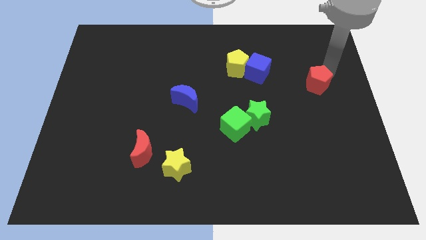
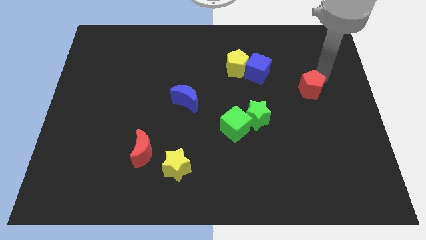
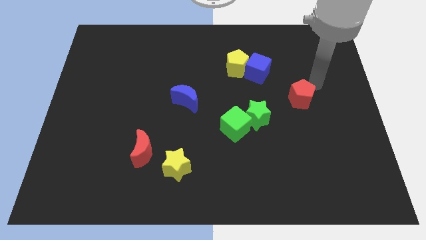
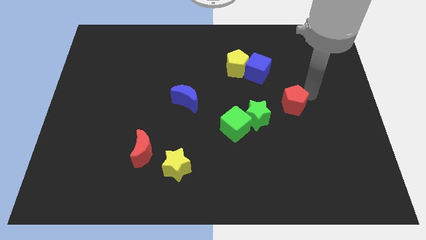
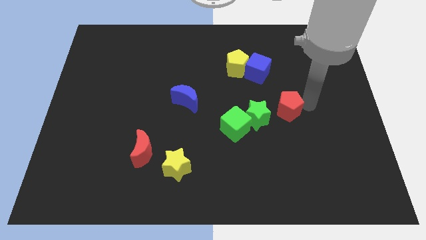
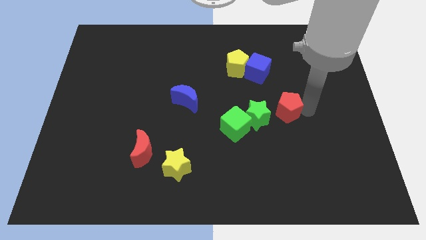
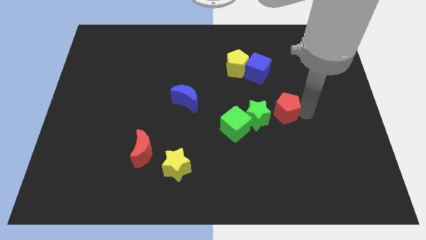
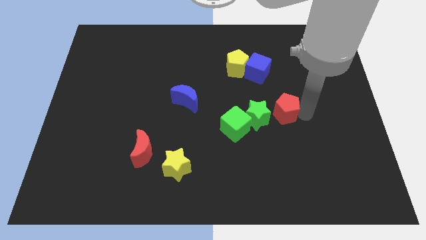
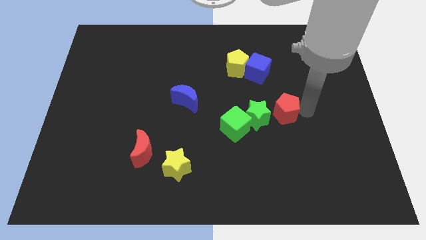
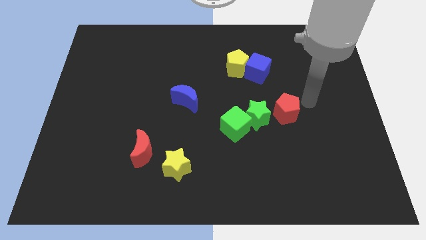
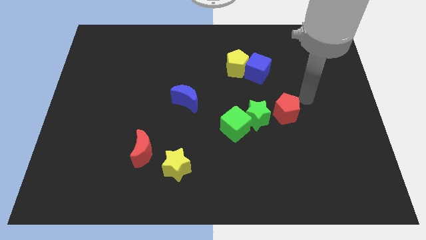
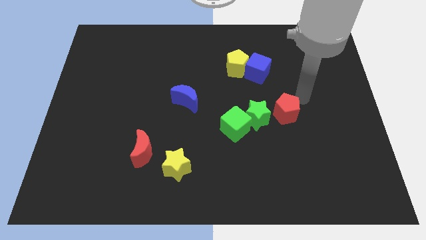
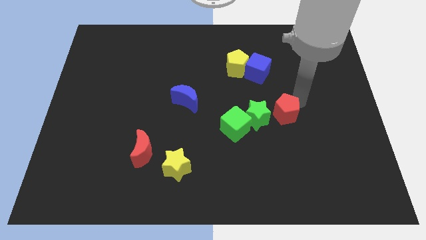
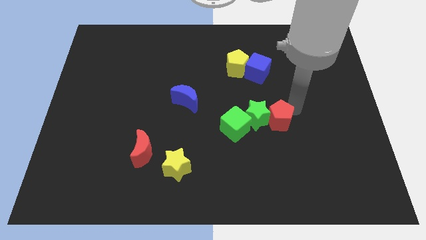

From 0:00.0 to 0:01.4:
push the red pentagon towards the right of the green star

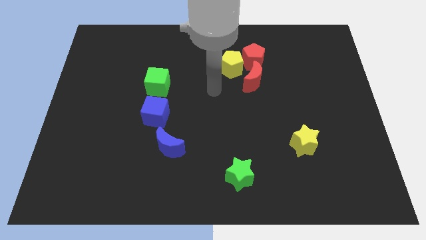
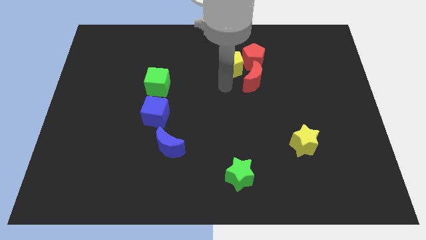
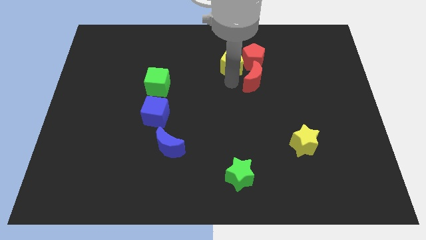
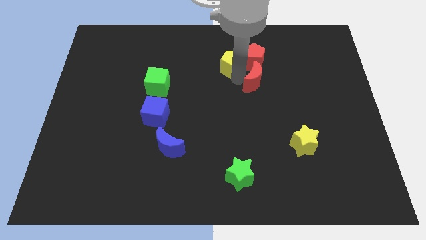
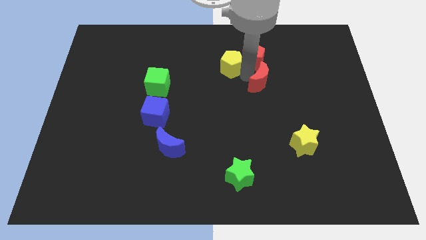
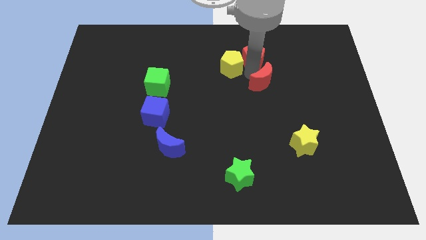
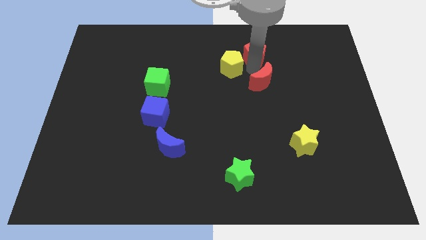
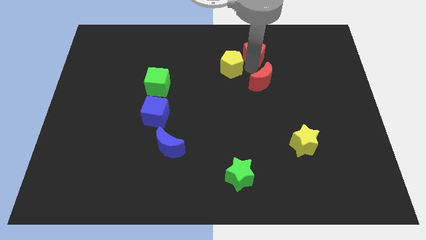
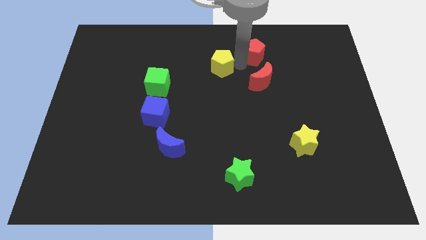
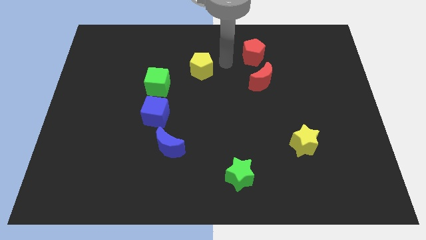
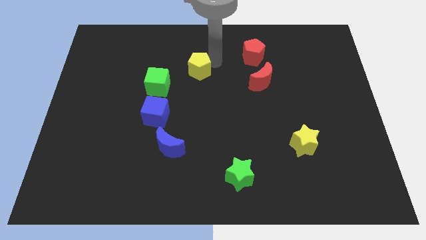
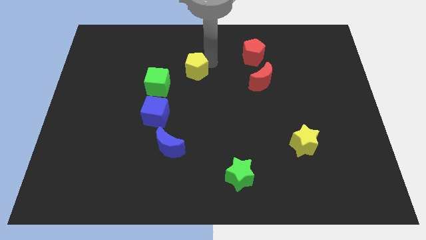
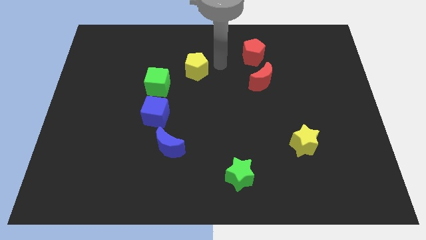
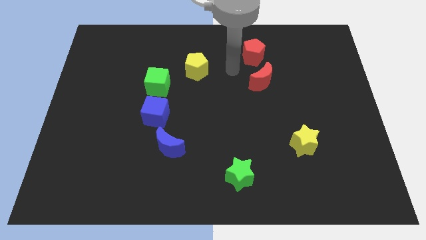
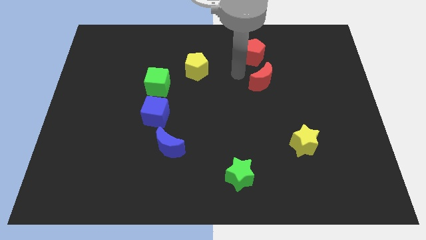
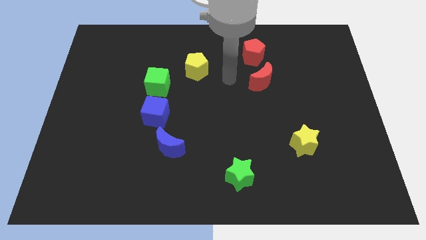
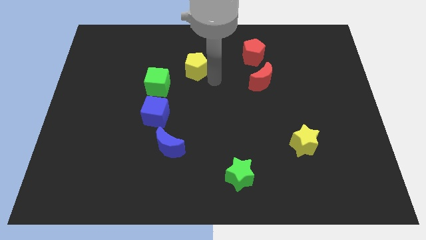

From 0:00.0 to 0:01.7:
separate the yellow pentagon from the red pentagon

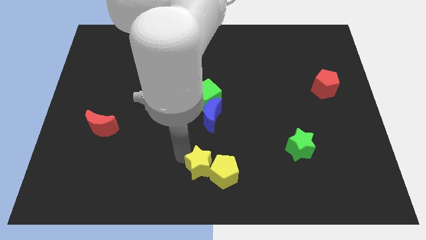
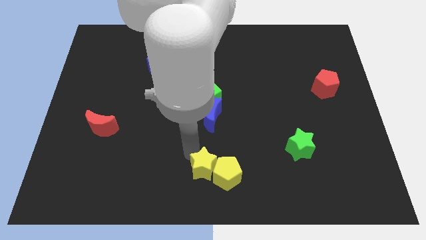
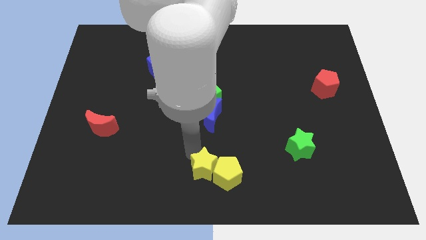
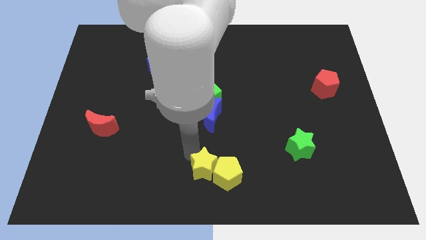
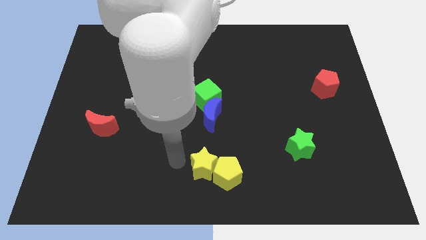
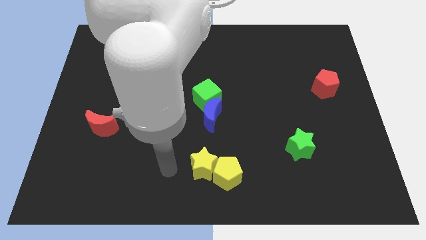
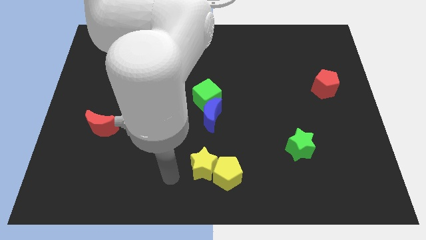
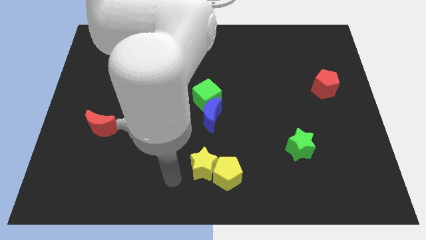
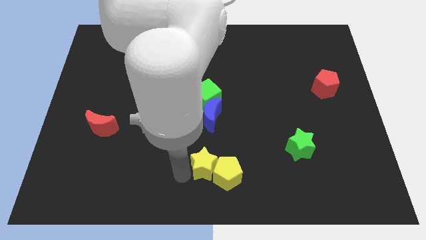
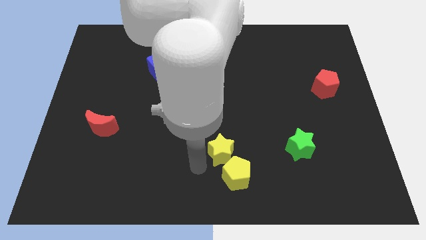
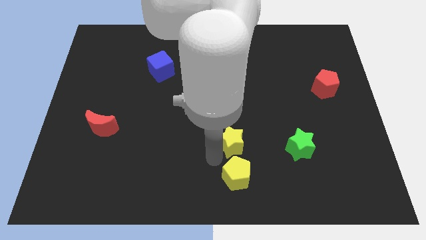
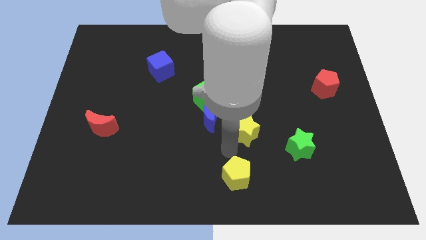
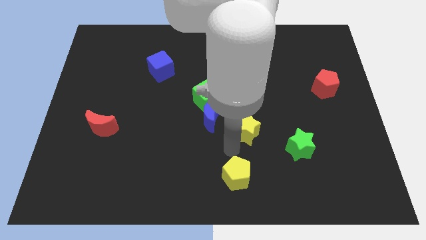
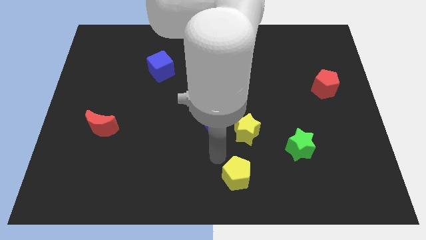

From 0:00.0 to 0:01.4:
separate the yellow star and yellow pentagon

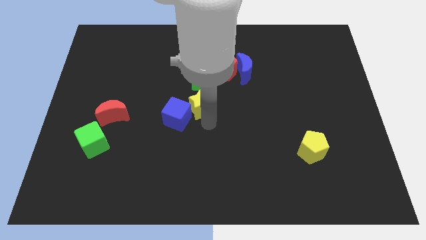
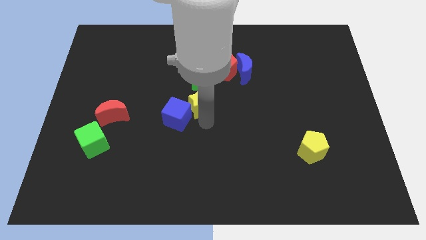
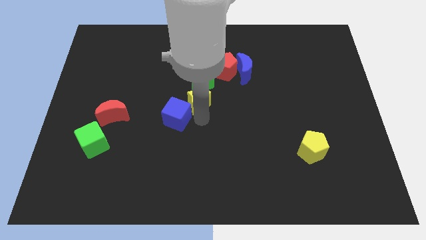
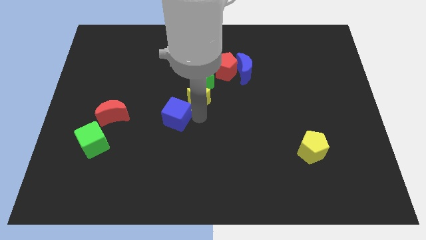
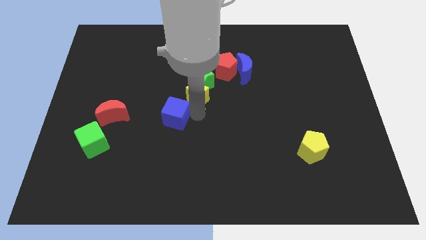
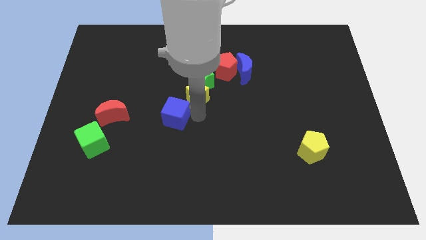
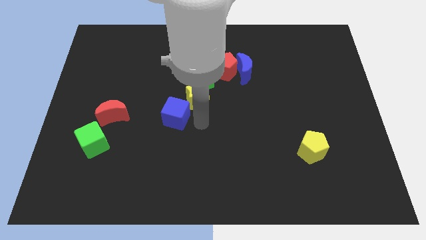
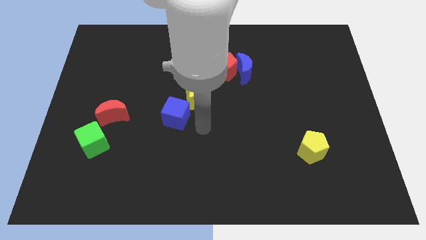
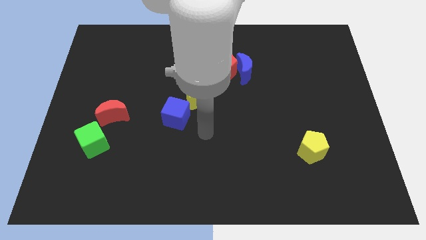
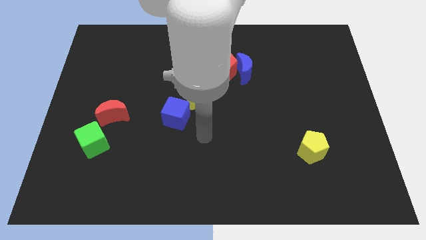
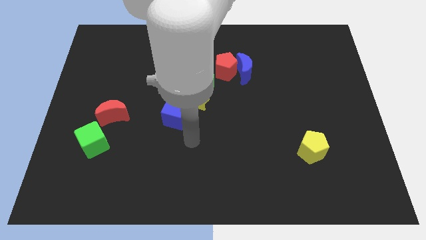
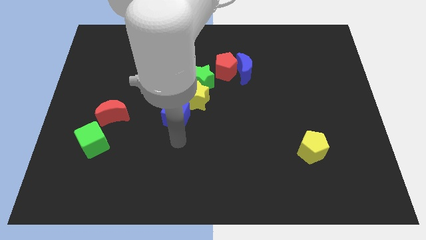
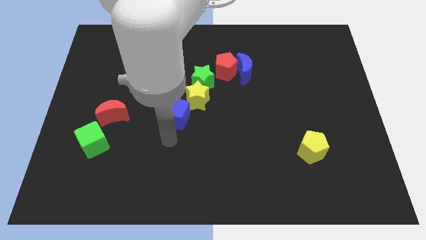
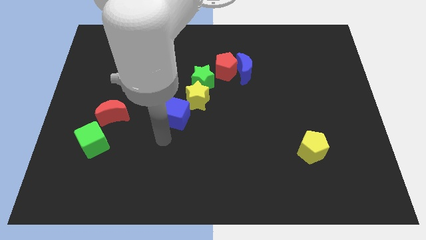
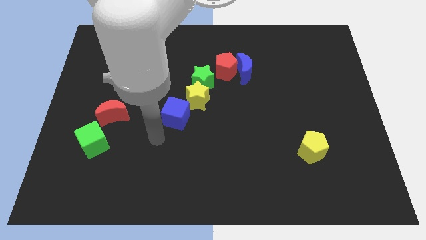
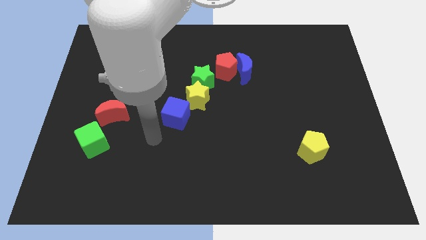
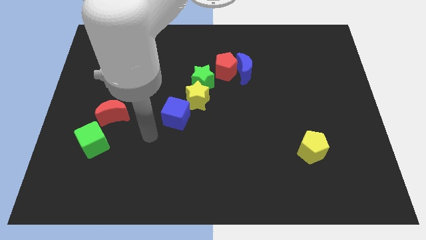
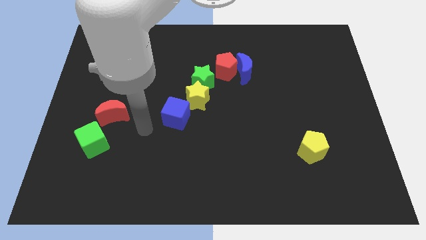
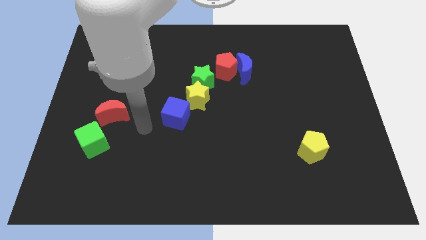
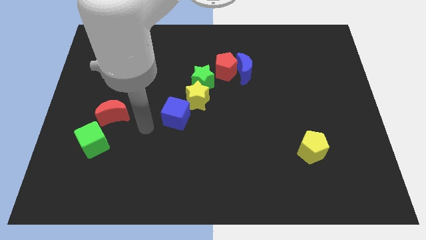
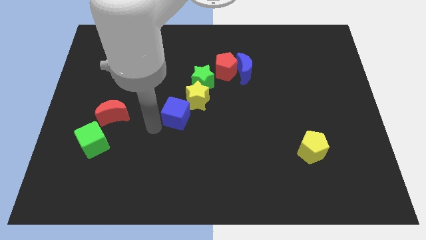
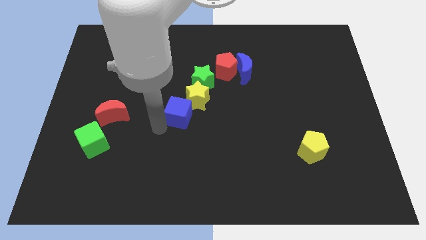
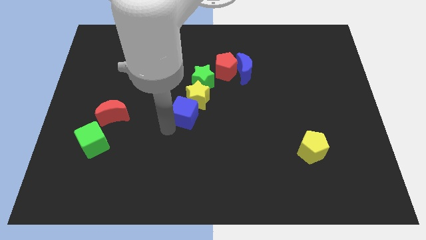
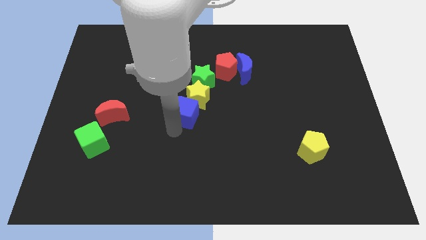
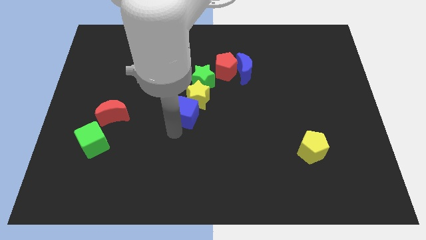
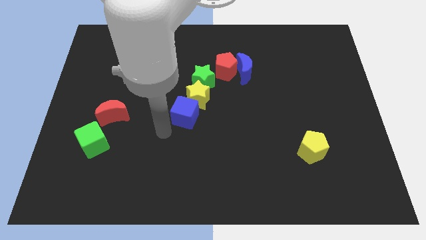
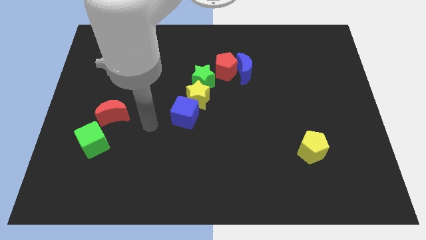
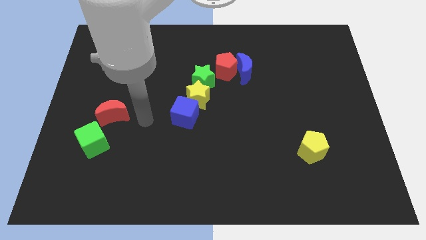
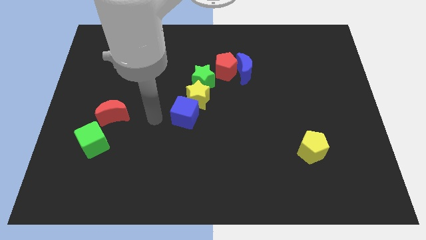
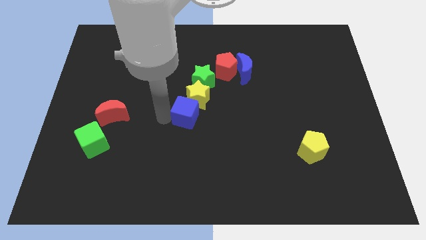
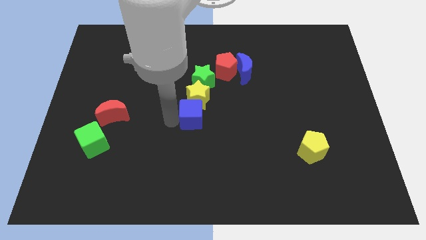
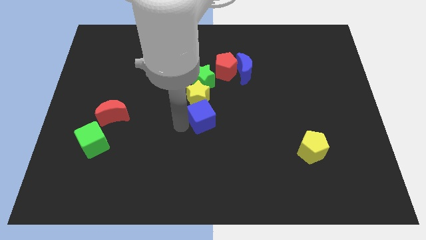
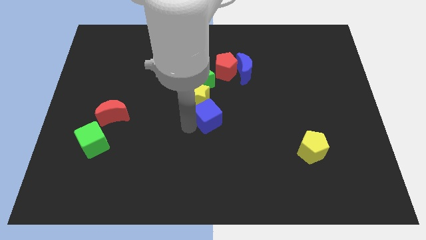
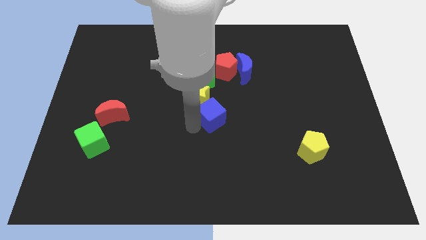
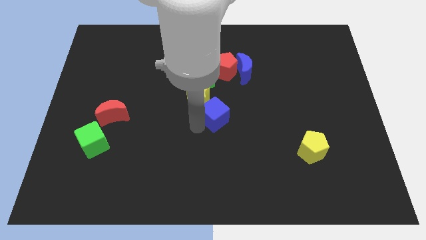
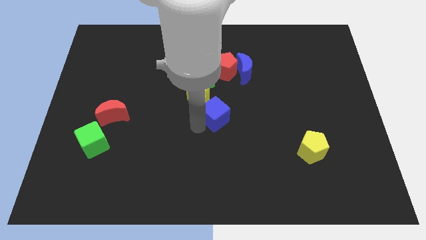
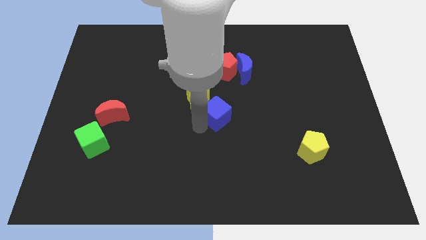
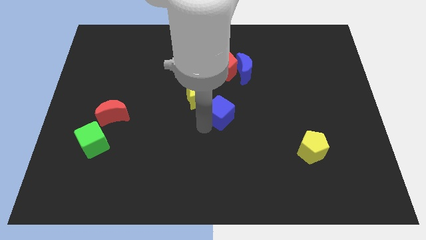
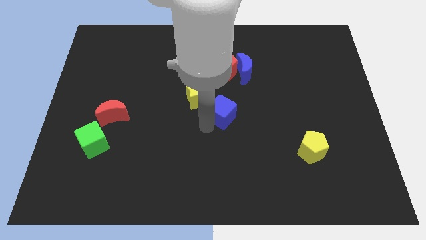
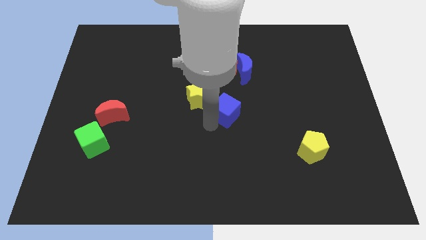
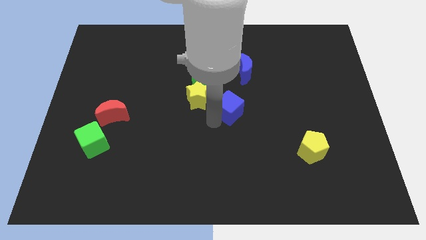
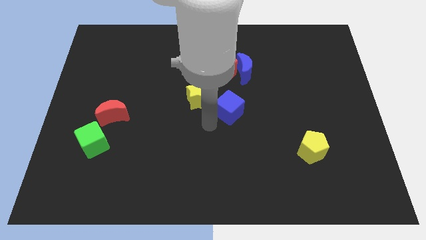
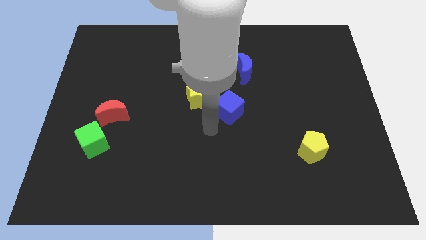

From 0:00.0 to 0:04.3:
move the blue cube to the center of the board

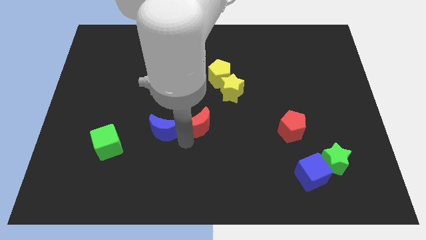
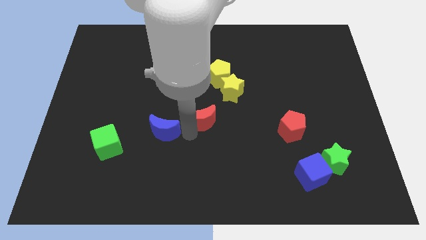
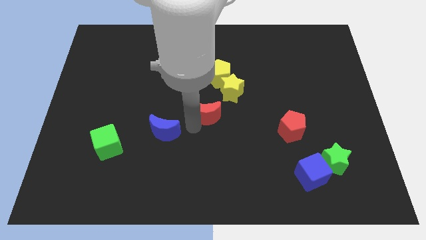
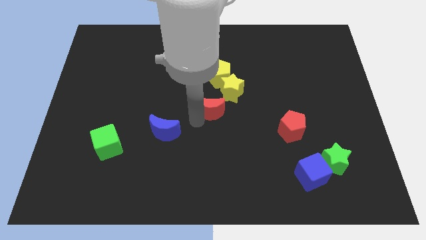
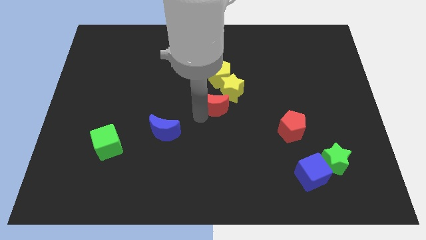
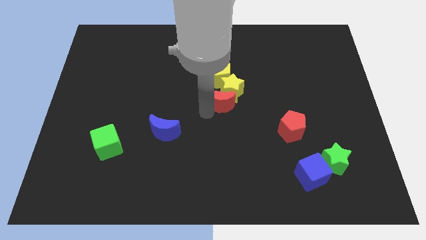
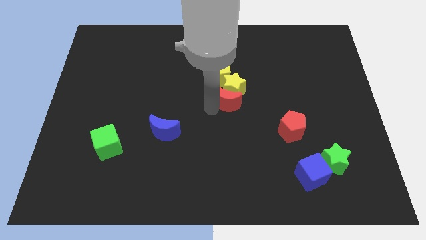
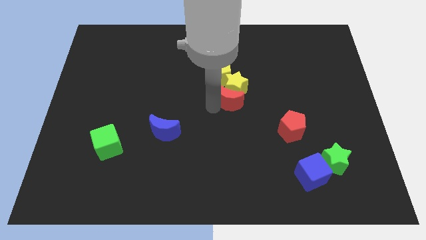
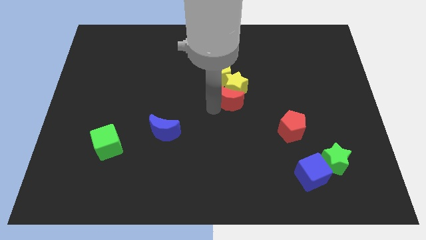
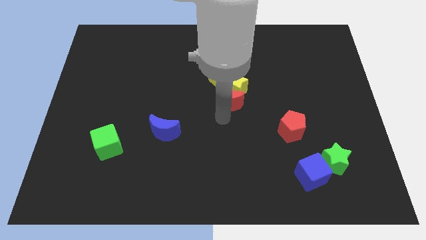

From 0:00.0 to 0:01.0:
push red crescent into yellow star
